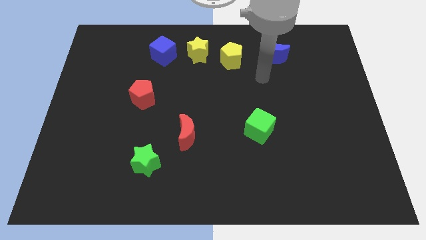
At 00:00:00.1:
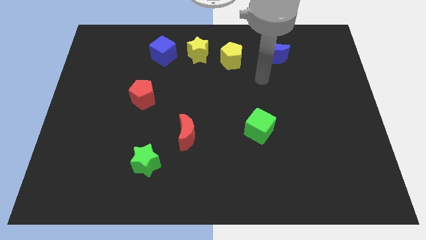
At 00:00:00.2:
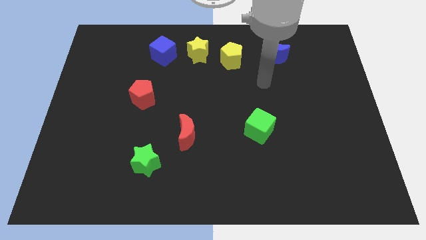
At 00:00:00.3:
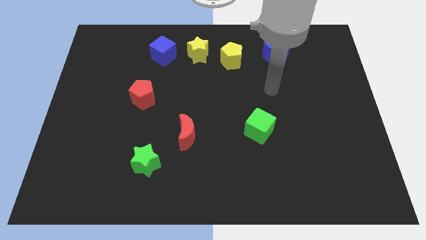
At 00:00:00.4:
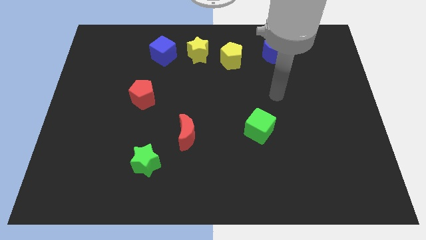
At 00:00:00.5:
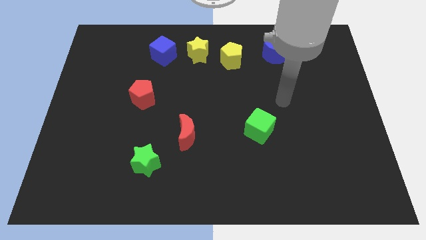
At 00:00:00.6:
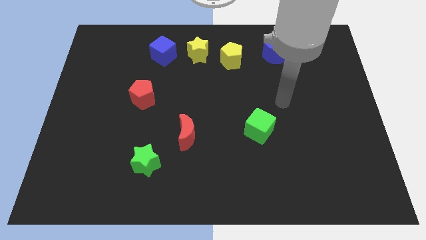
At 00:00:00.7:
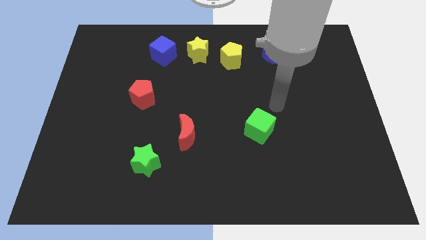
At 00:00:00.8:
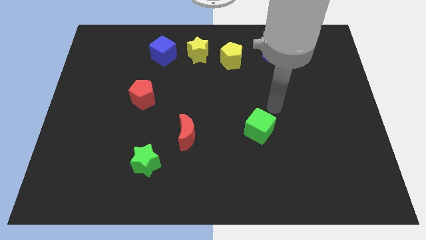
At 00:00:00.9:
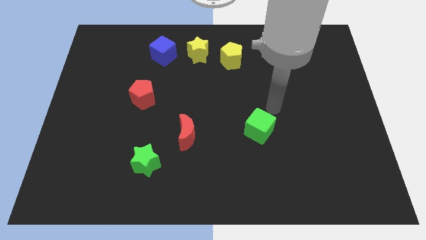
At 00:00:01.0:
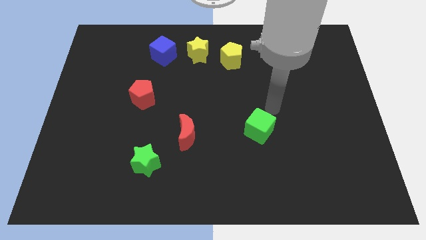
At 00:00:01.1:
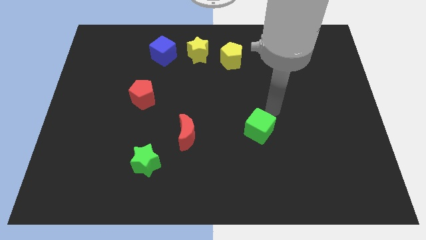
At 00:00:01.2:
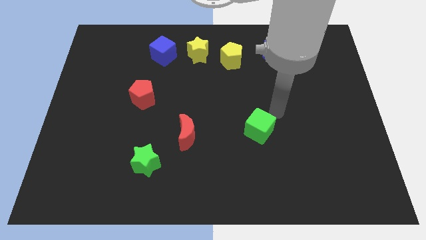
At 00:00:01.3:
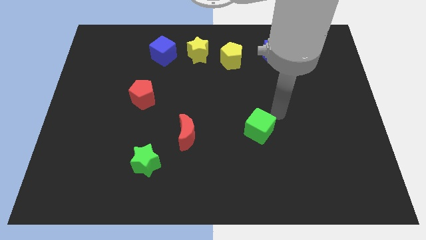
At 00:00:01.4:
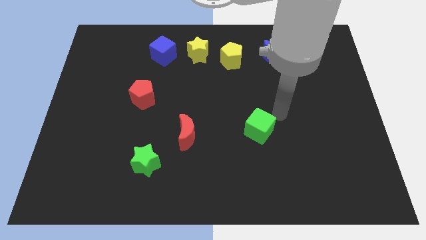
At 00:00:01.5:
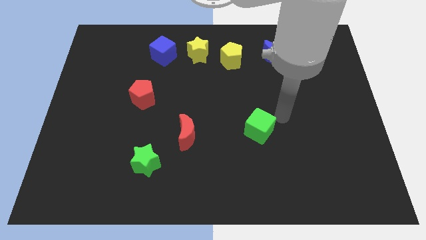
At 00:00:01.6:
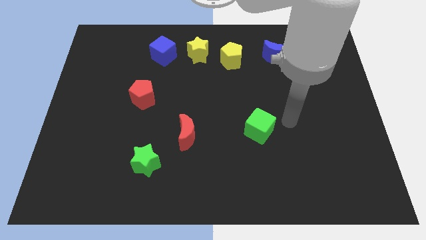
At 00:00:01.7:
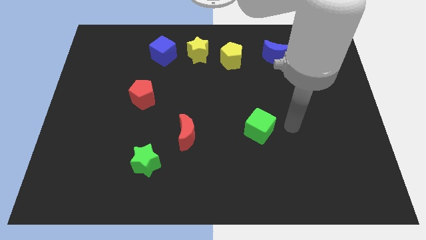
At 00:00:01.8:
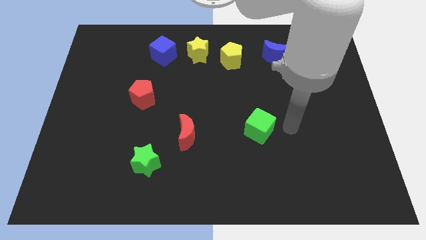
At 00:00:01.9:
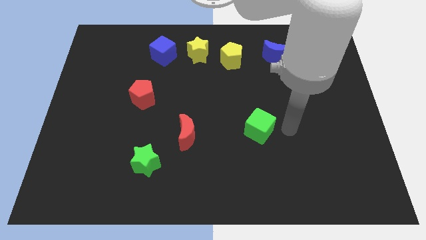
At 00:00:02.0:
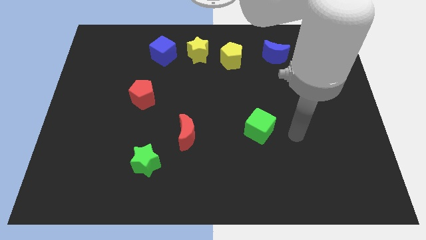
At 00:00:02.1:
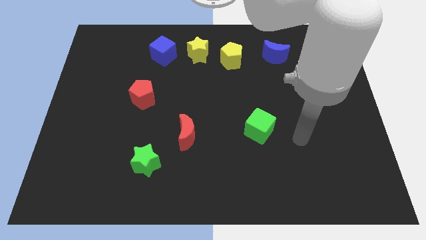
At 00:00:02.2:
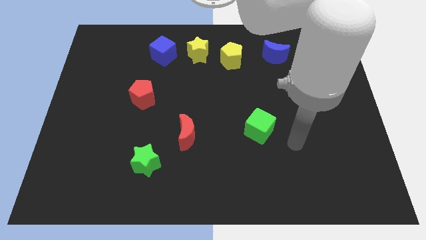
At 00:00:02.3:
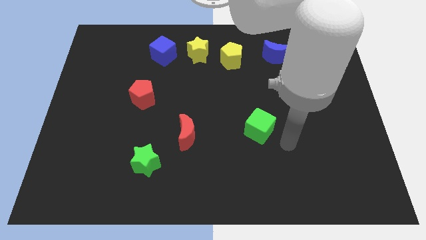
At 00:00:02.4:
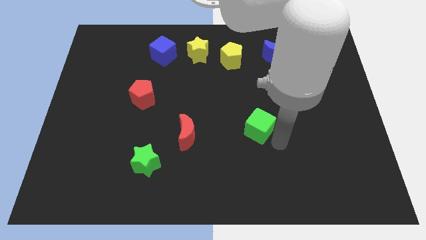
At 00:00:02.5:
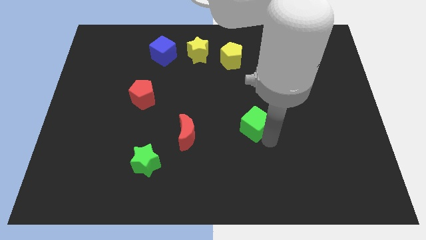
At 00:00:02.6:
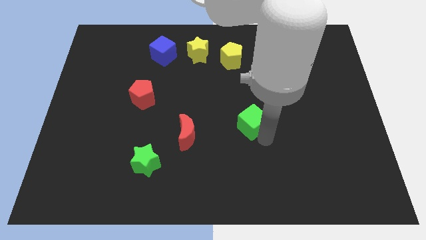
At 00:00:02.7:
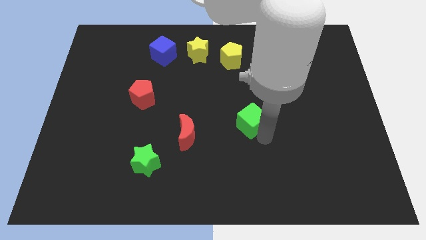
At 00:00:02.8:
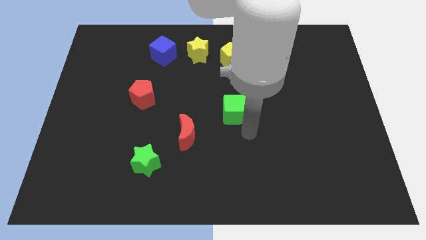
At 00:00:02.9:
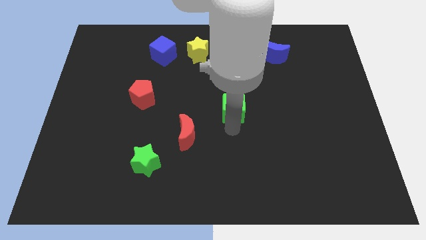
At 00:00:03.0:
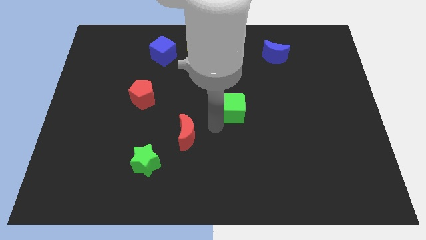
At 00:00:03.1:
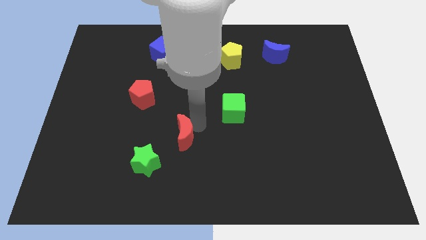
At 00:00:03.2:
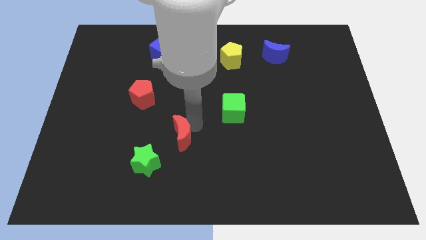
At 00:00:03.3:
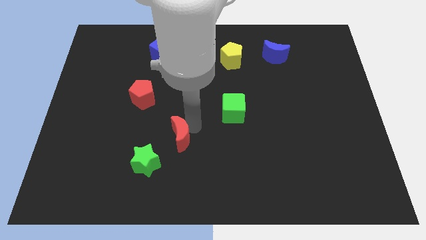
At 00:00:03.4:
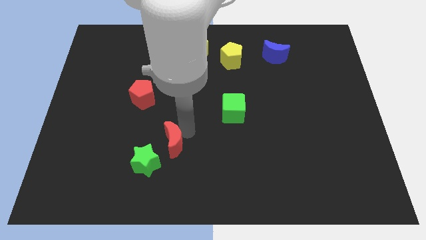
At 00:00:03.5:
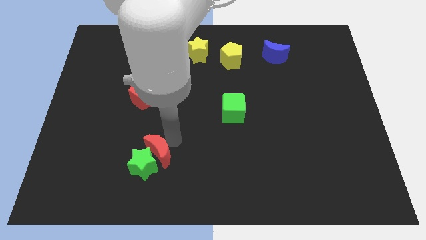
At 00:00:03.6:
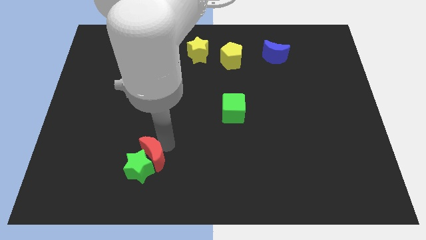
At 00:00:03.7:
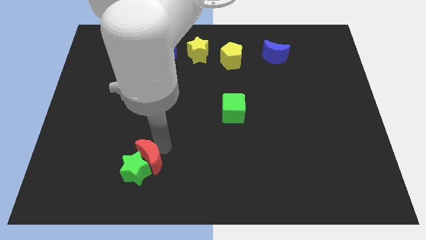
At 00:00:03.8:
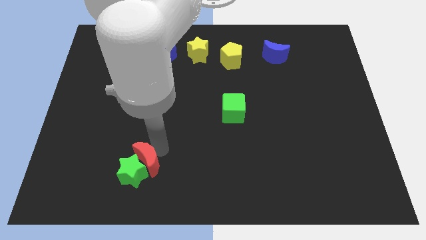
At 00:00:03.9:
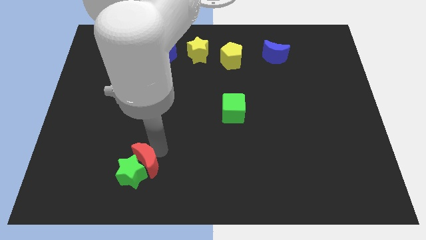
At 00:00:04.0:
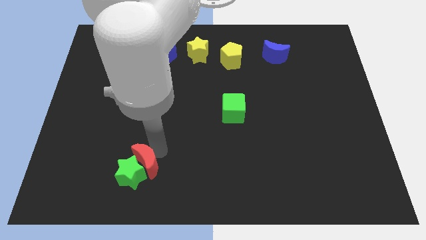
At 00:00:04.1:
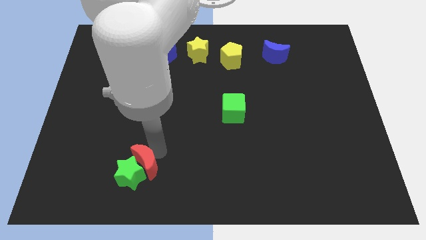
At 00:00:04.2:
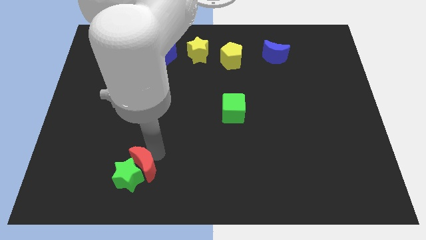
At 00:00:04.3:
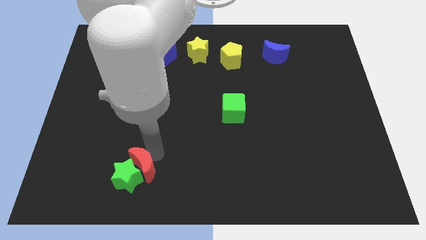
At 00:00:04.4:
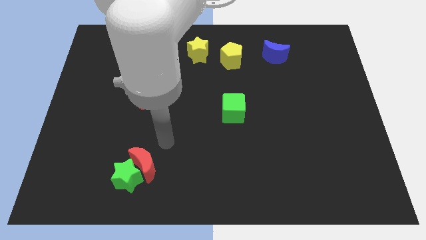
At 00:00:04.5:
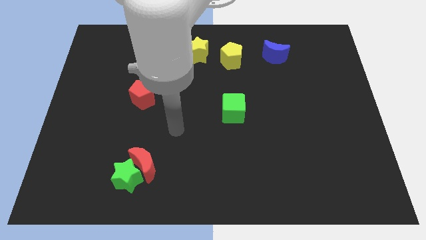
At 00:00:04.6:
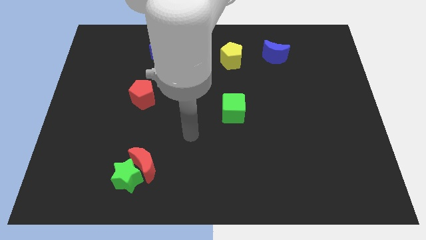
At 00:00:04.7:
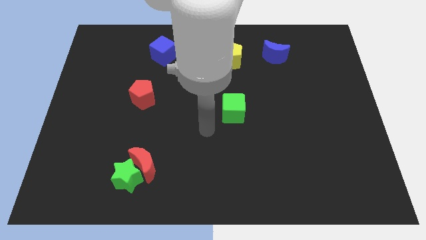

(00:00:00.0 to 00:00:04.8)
move the red crescent to top of the green star

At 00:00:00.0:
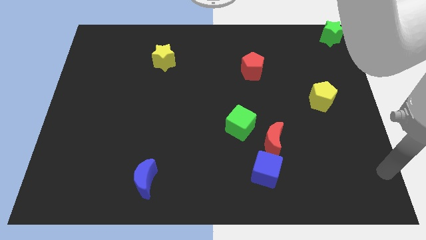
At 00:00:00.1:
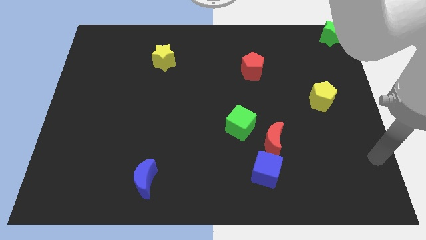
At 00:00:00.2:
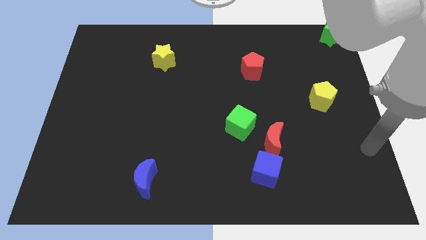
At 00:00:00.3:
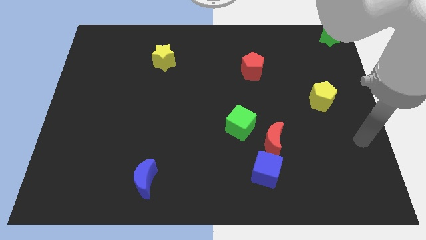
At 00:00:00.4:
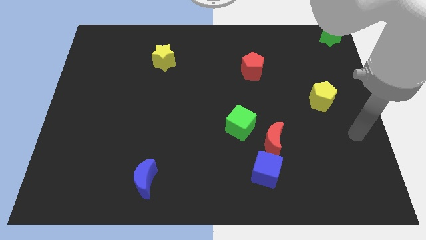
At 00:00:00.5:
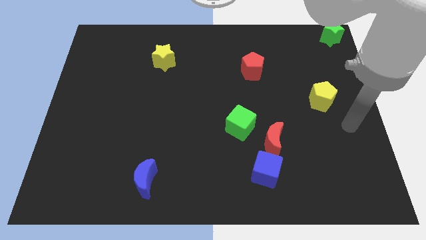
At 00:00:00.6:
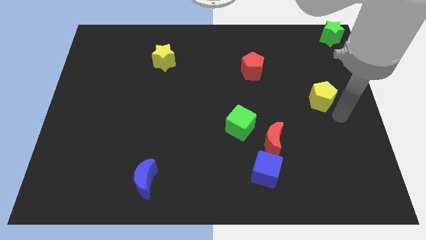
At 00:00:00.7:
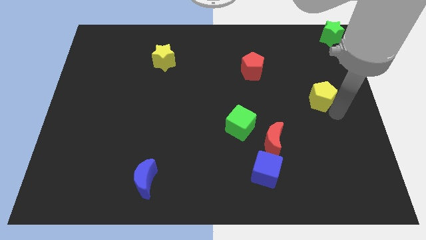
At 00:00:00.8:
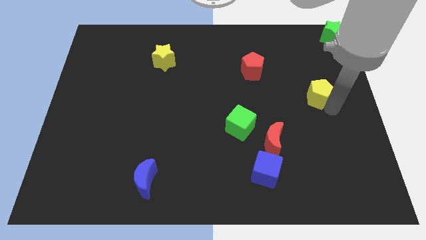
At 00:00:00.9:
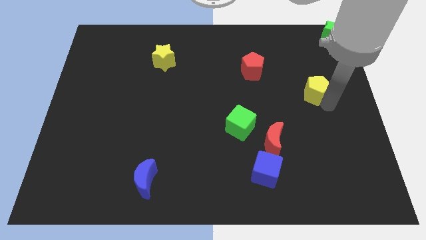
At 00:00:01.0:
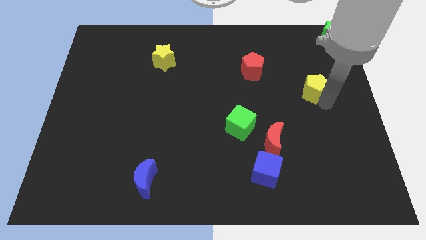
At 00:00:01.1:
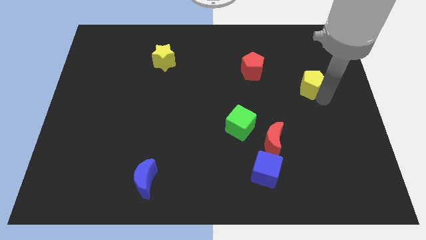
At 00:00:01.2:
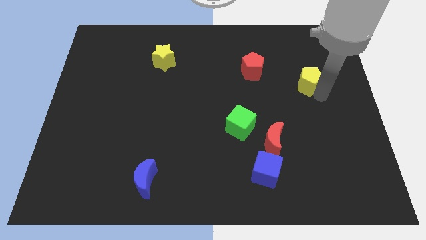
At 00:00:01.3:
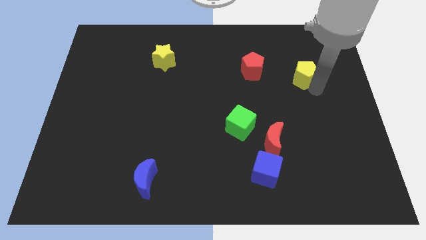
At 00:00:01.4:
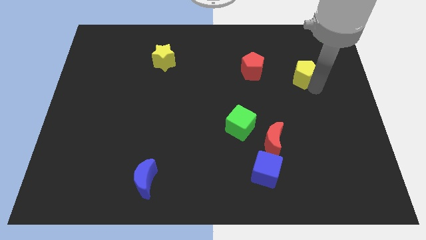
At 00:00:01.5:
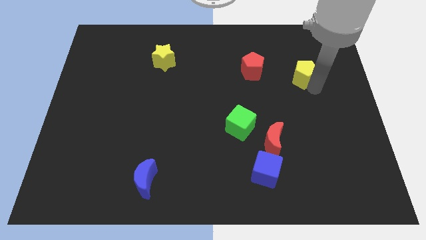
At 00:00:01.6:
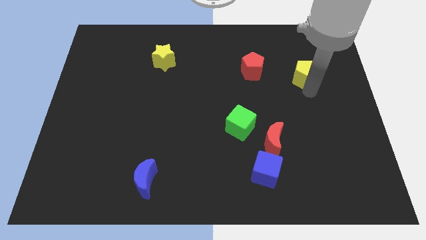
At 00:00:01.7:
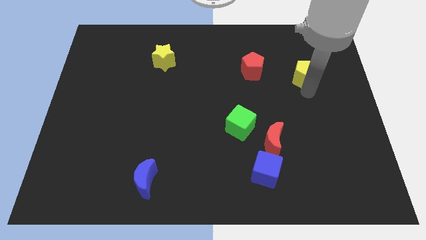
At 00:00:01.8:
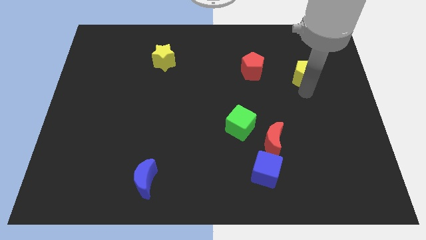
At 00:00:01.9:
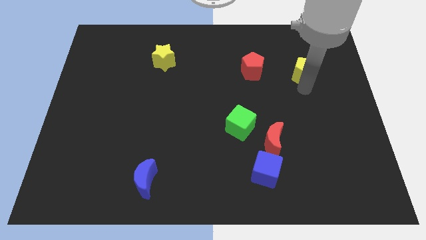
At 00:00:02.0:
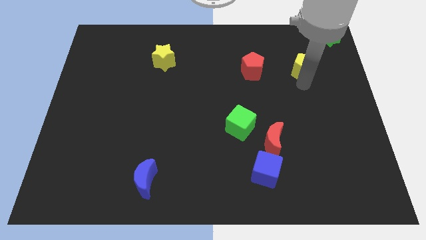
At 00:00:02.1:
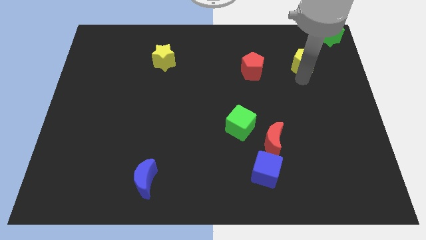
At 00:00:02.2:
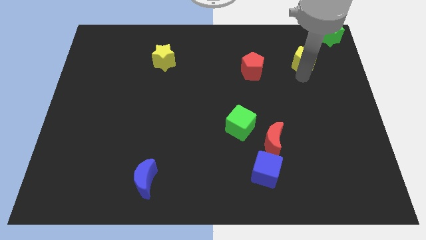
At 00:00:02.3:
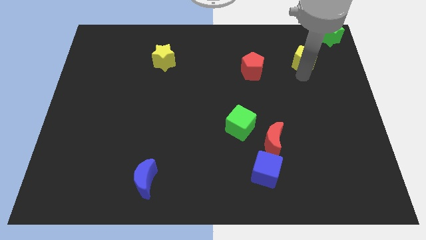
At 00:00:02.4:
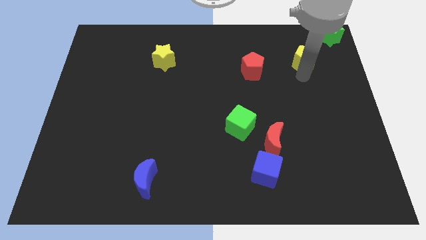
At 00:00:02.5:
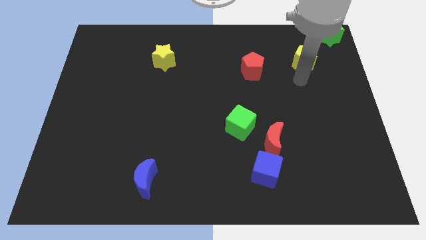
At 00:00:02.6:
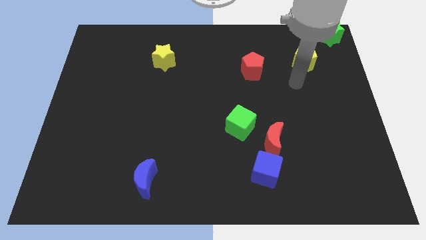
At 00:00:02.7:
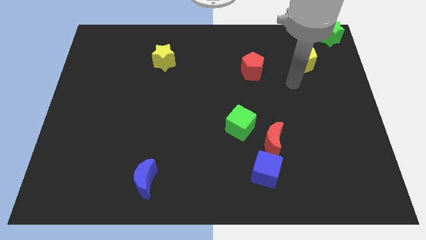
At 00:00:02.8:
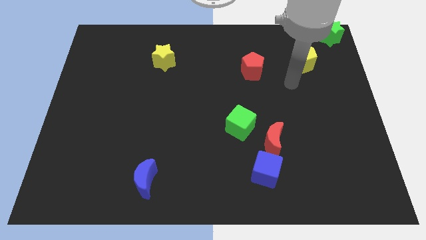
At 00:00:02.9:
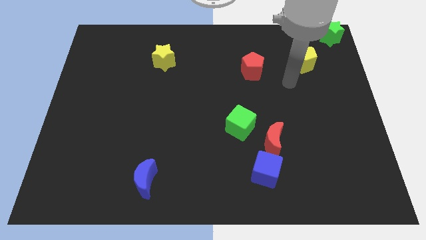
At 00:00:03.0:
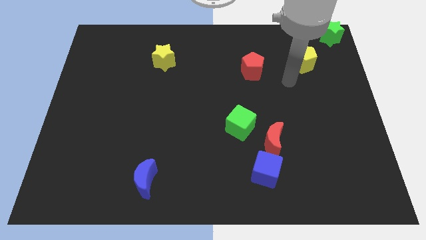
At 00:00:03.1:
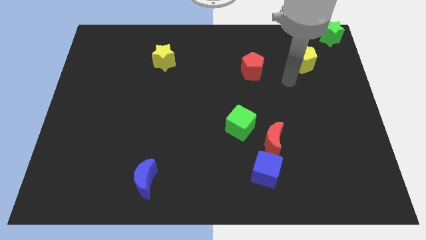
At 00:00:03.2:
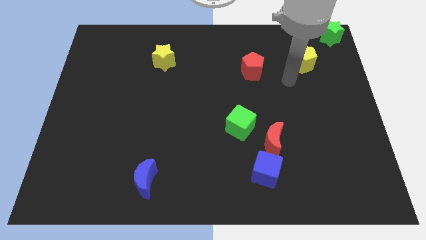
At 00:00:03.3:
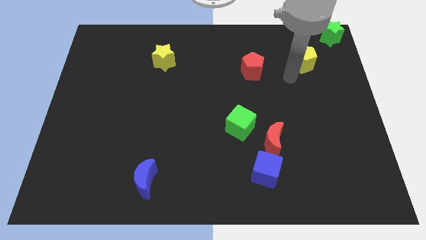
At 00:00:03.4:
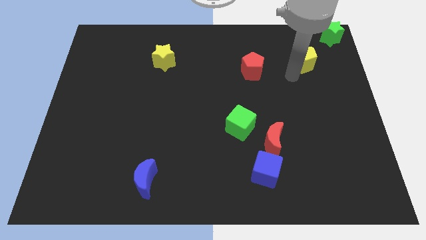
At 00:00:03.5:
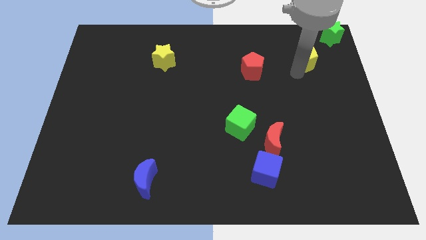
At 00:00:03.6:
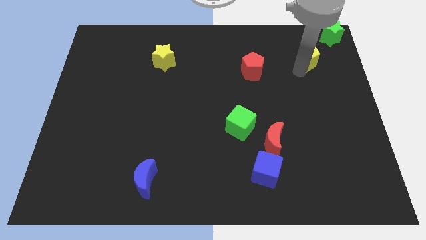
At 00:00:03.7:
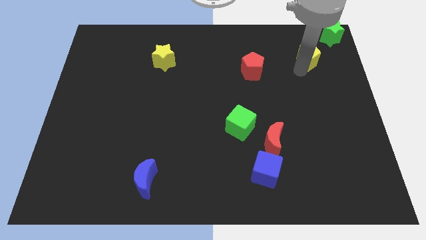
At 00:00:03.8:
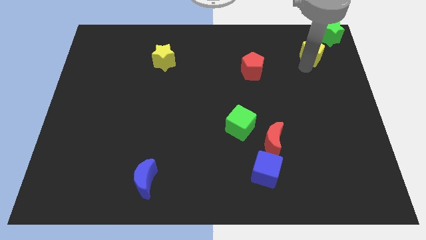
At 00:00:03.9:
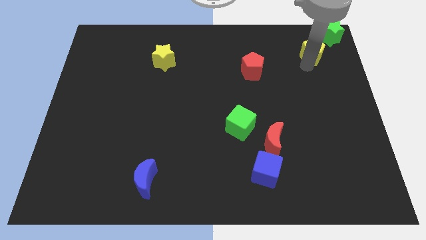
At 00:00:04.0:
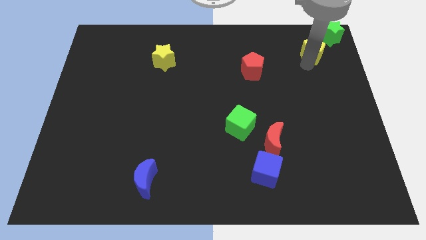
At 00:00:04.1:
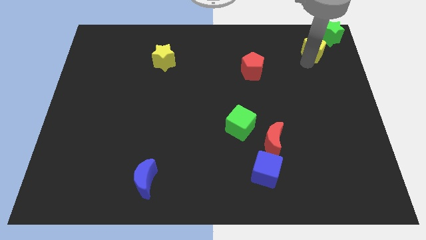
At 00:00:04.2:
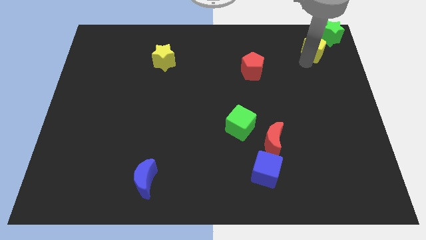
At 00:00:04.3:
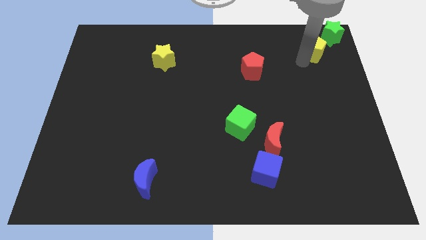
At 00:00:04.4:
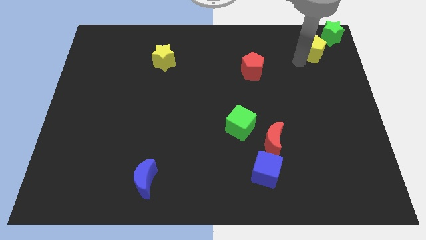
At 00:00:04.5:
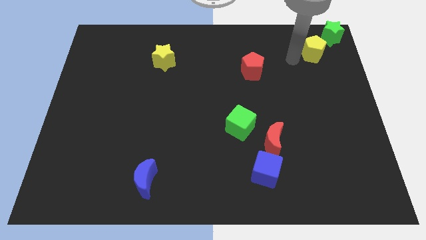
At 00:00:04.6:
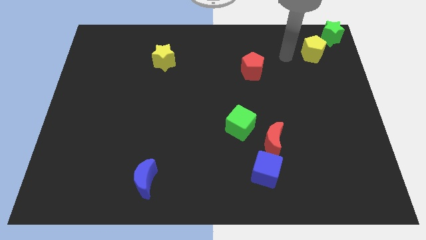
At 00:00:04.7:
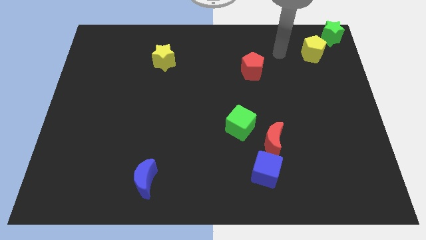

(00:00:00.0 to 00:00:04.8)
push the yellow pentagon to the diagonal bottom left of the green star
